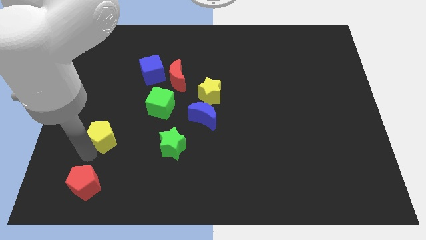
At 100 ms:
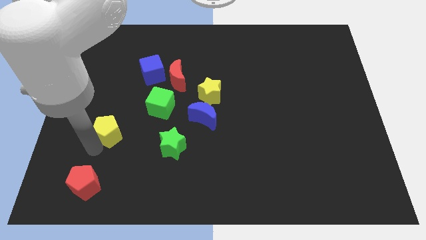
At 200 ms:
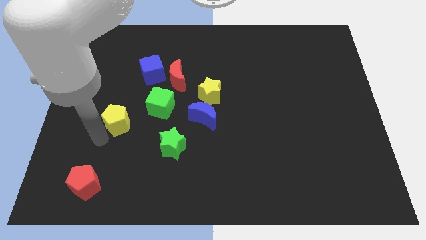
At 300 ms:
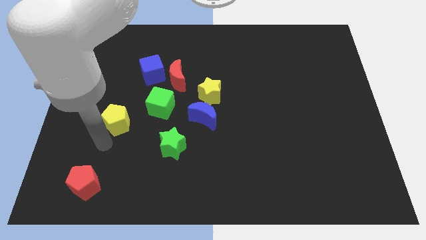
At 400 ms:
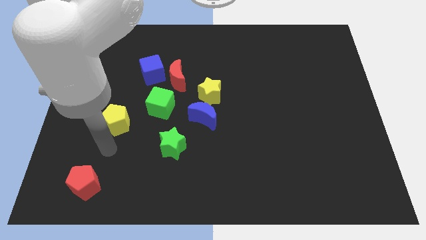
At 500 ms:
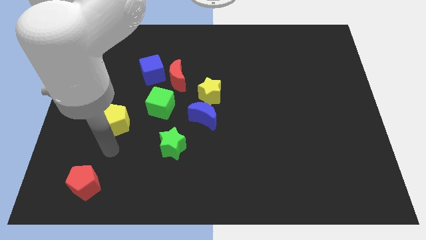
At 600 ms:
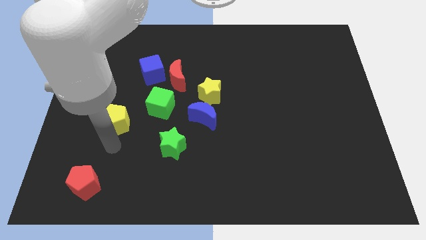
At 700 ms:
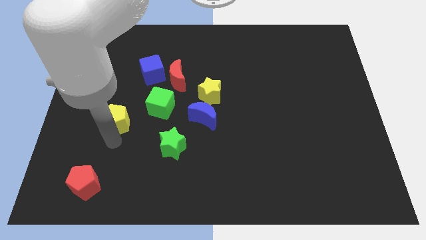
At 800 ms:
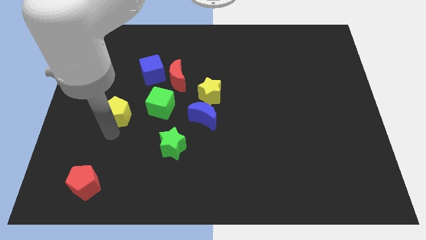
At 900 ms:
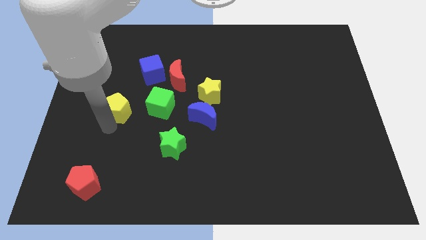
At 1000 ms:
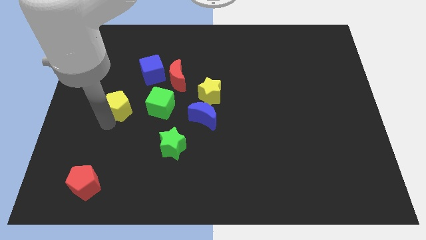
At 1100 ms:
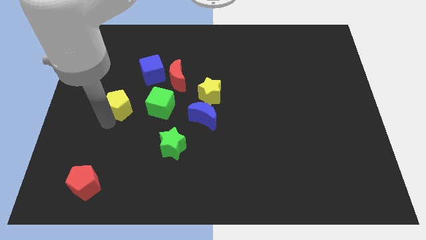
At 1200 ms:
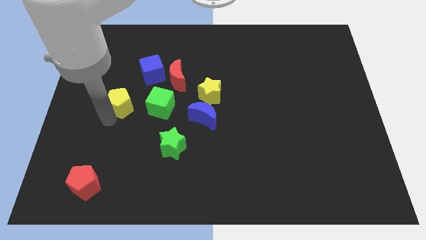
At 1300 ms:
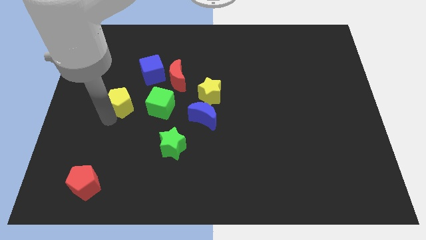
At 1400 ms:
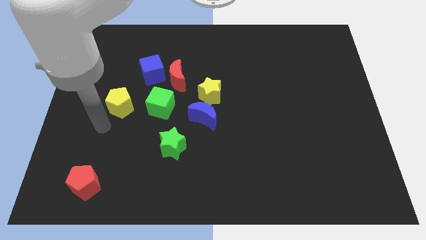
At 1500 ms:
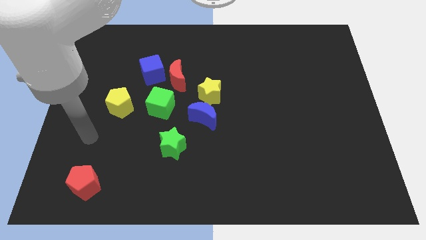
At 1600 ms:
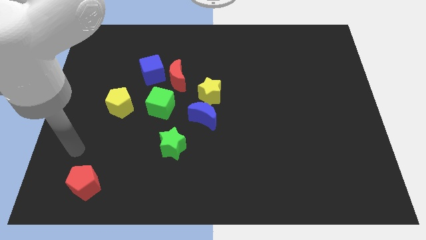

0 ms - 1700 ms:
move the yellow pentagon to the left of the green cube

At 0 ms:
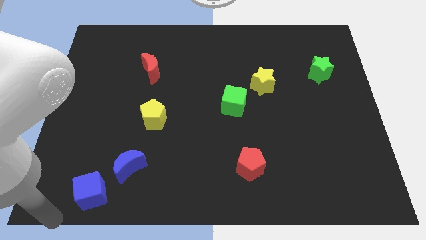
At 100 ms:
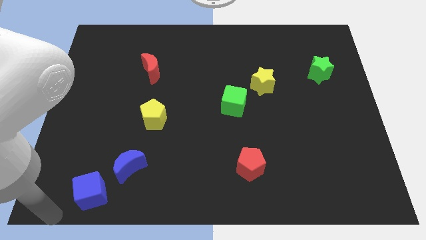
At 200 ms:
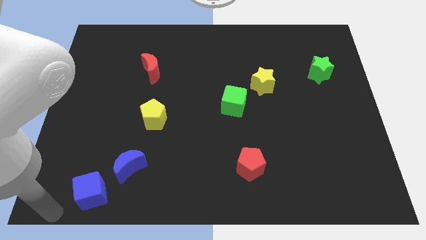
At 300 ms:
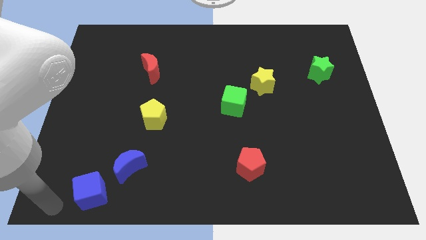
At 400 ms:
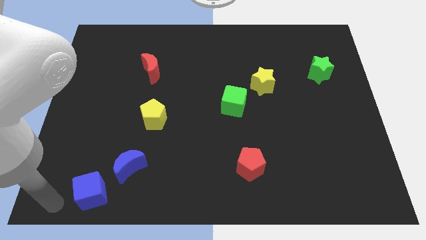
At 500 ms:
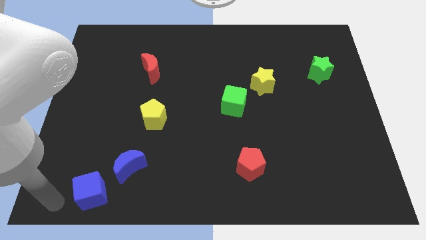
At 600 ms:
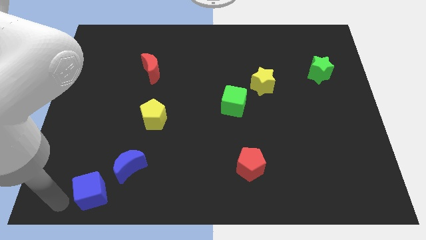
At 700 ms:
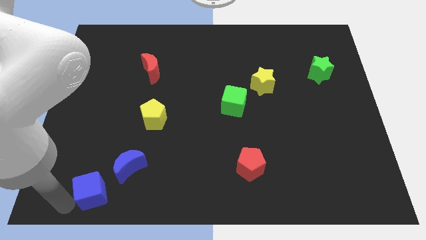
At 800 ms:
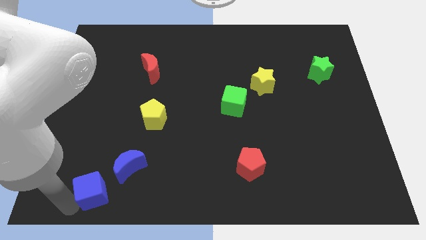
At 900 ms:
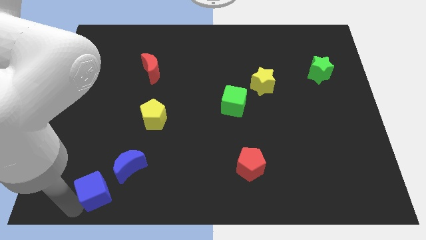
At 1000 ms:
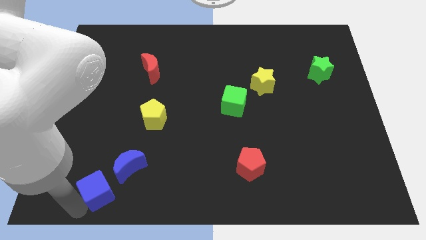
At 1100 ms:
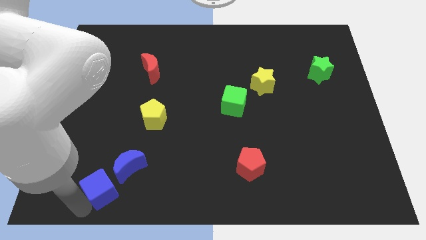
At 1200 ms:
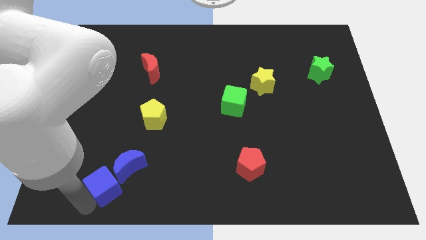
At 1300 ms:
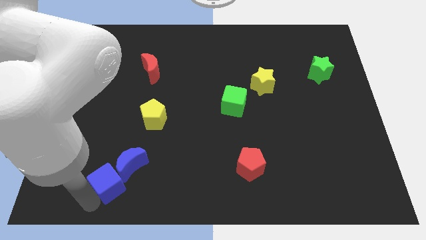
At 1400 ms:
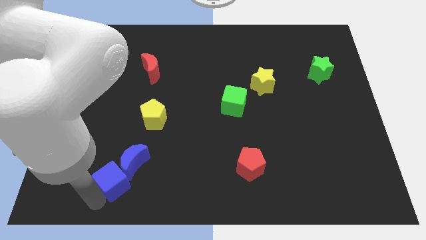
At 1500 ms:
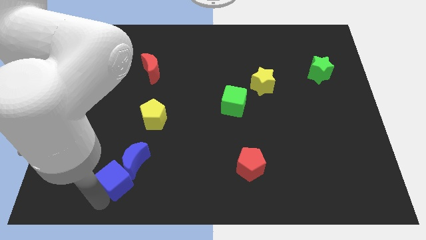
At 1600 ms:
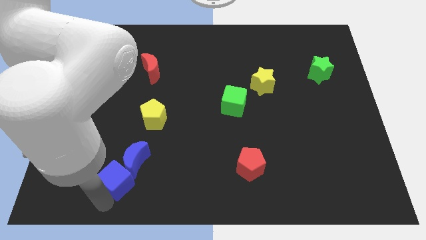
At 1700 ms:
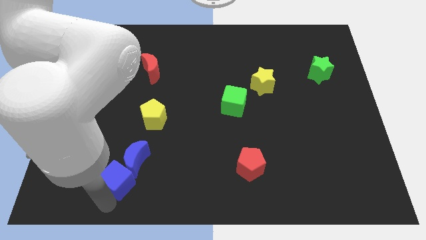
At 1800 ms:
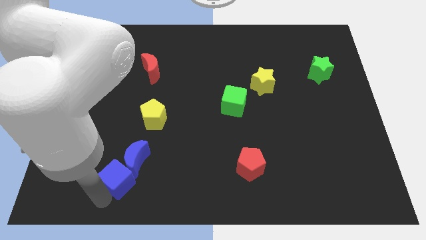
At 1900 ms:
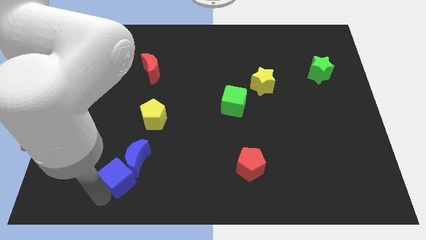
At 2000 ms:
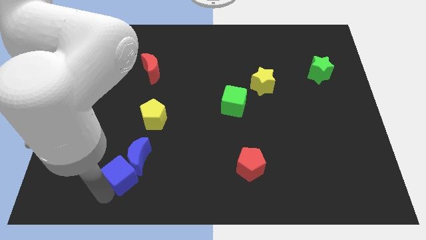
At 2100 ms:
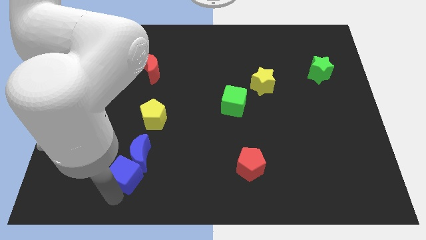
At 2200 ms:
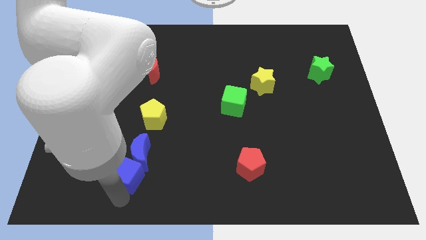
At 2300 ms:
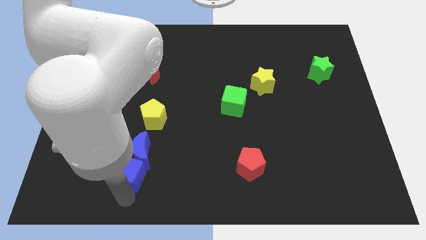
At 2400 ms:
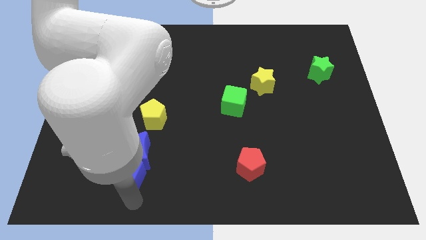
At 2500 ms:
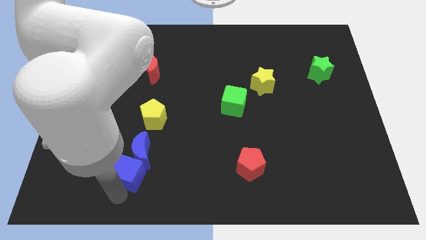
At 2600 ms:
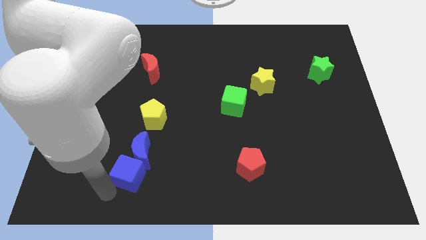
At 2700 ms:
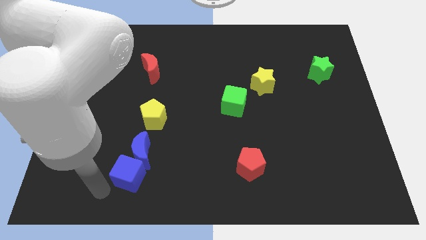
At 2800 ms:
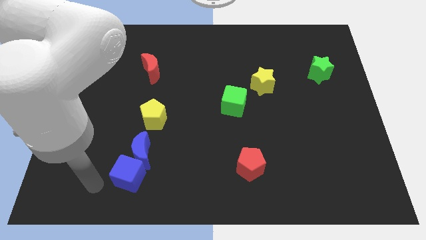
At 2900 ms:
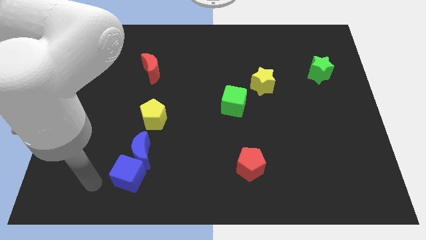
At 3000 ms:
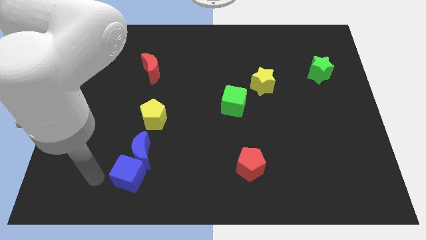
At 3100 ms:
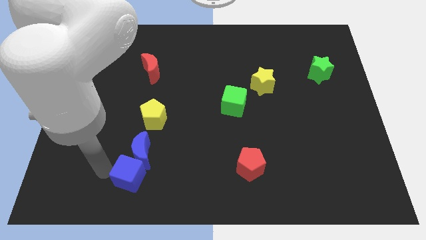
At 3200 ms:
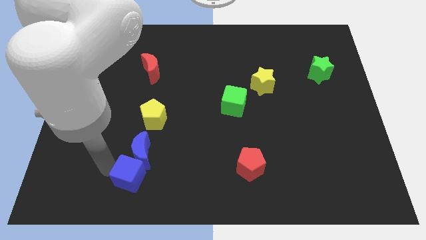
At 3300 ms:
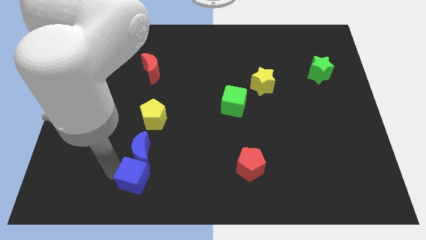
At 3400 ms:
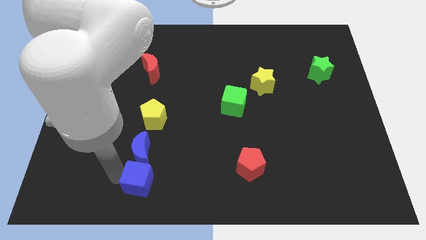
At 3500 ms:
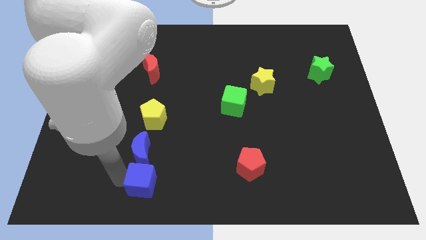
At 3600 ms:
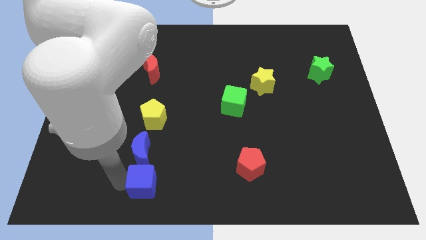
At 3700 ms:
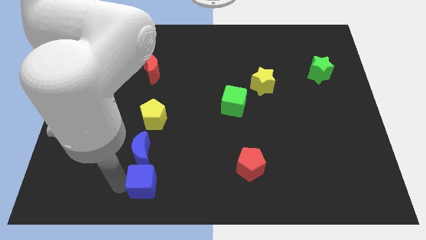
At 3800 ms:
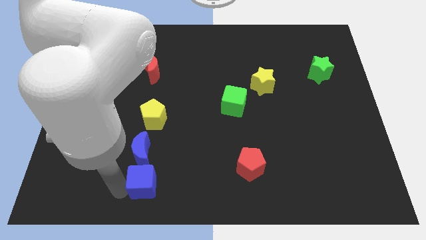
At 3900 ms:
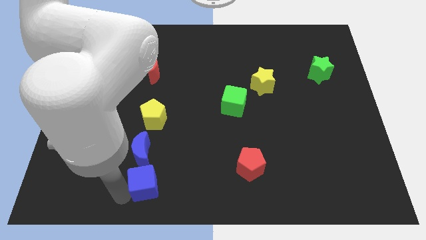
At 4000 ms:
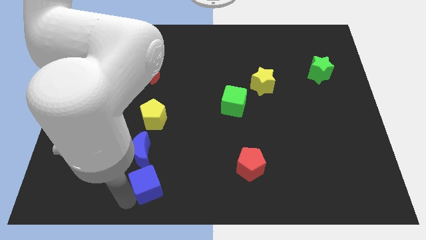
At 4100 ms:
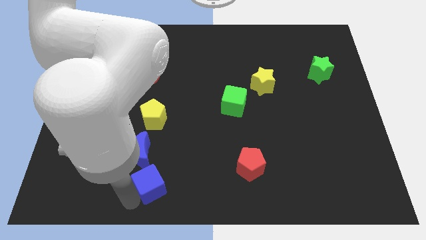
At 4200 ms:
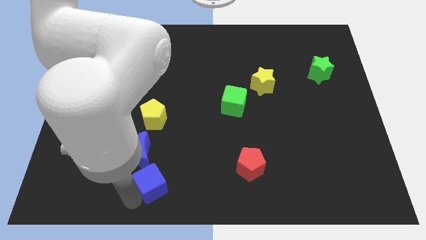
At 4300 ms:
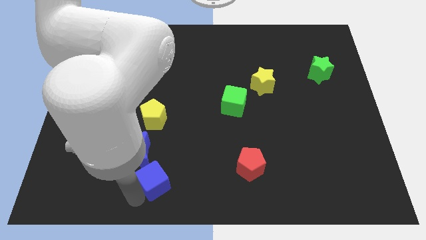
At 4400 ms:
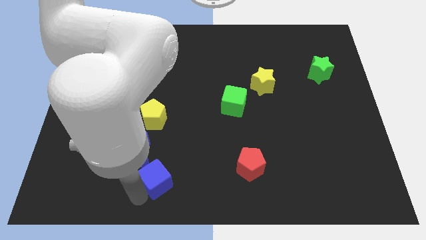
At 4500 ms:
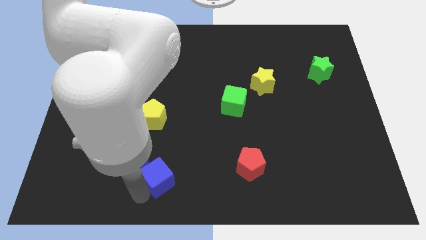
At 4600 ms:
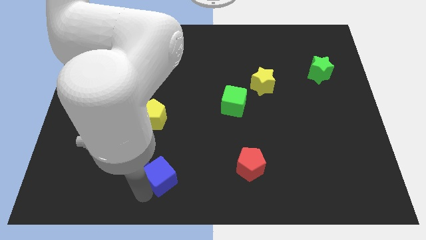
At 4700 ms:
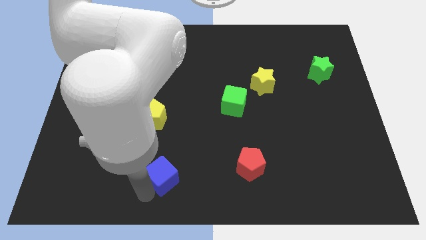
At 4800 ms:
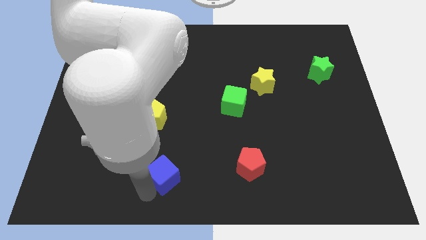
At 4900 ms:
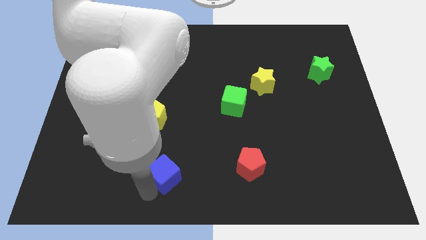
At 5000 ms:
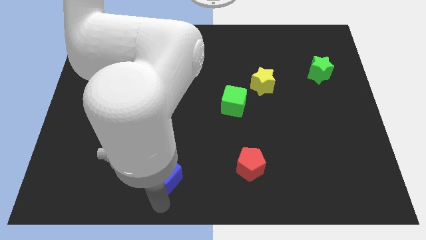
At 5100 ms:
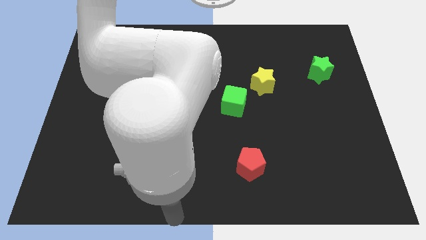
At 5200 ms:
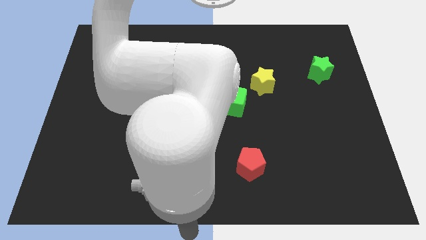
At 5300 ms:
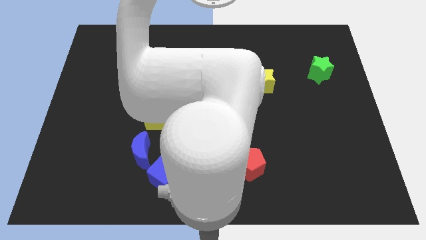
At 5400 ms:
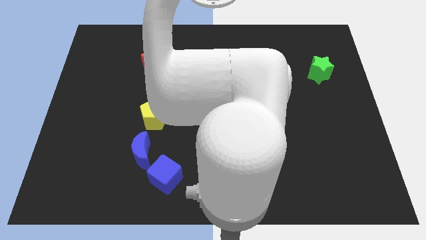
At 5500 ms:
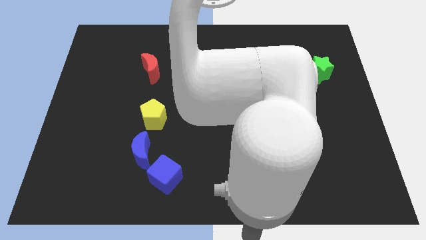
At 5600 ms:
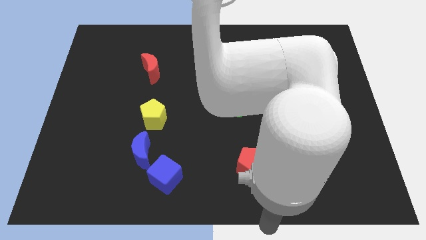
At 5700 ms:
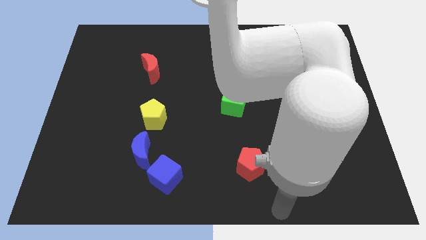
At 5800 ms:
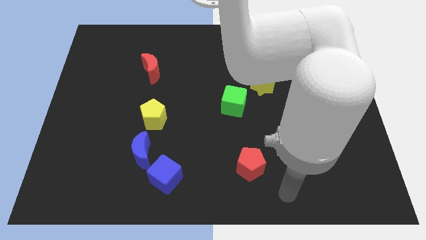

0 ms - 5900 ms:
push blue cube into the blue moon

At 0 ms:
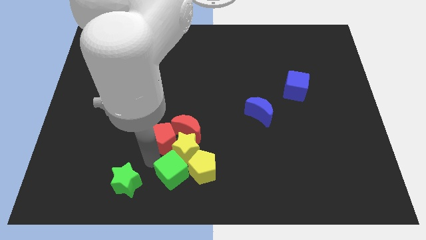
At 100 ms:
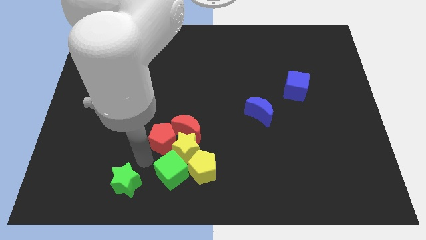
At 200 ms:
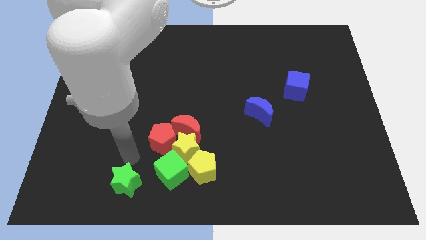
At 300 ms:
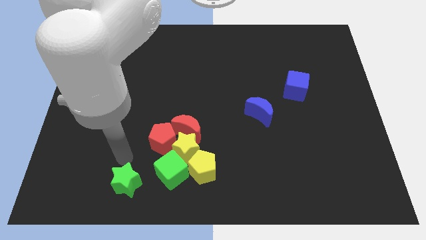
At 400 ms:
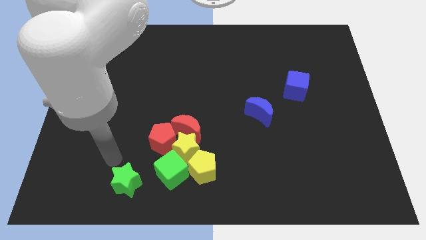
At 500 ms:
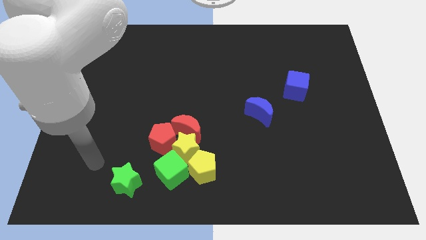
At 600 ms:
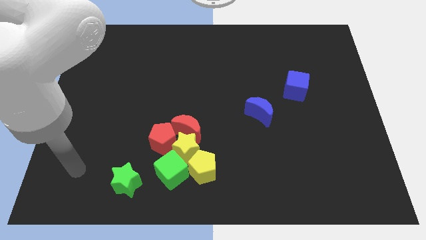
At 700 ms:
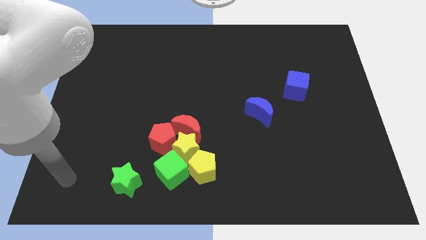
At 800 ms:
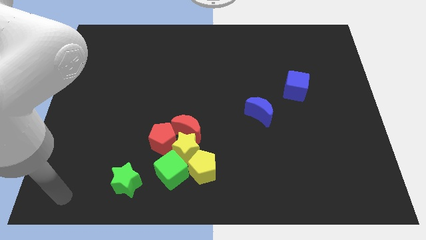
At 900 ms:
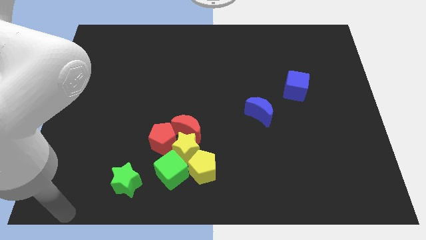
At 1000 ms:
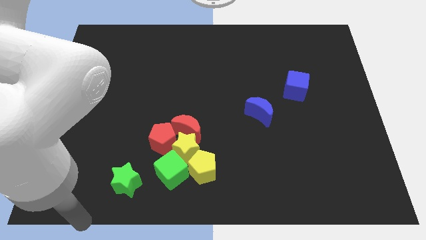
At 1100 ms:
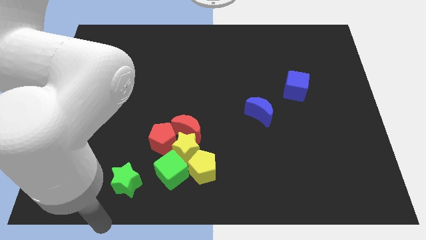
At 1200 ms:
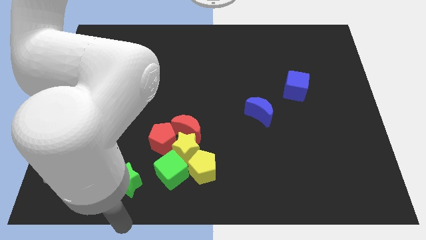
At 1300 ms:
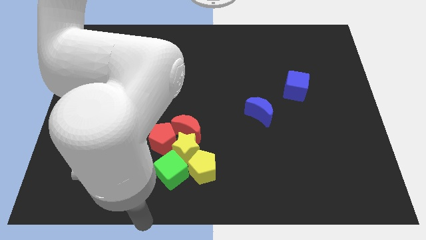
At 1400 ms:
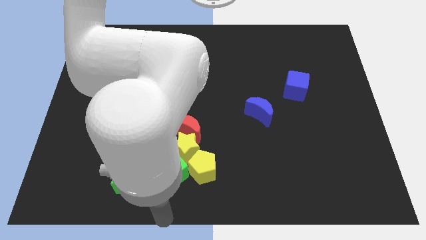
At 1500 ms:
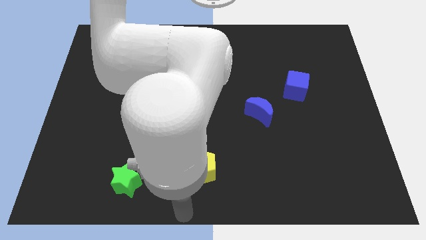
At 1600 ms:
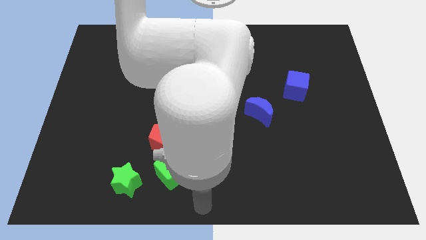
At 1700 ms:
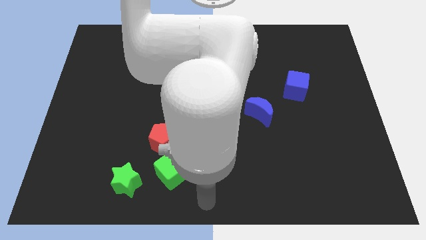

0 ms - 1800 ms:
move your arm towards the yellow pentagon
